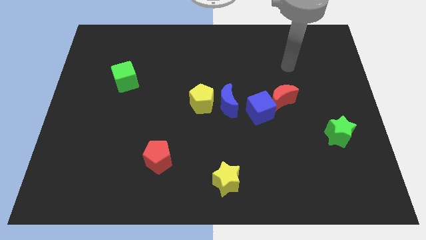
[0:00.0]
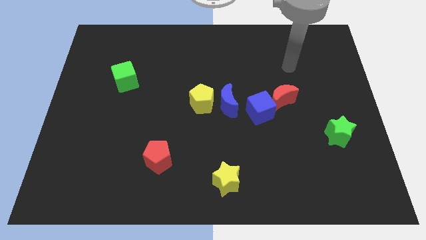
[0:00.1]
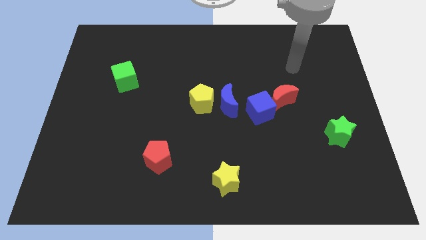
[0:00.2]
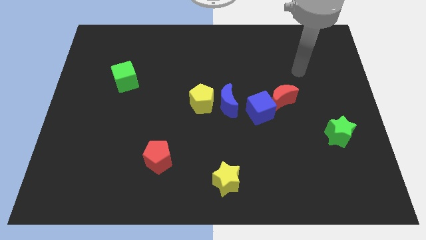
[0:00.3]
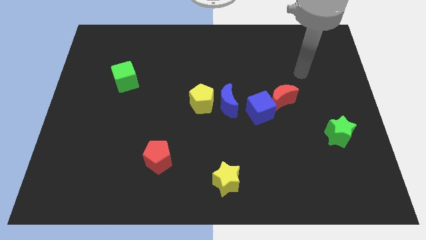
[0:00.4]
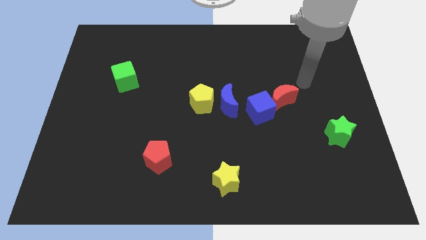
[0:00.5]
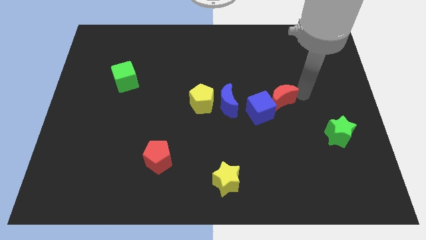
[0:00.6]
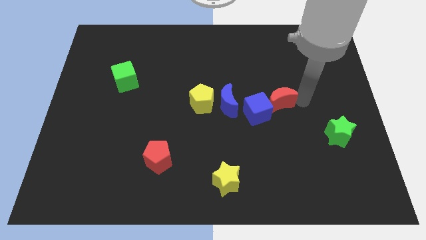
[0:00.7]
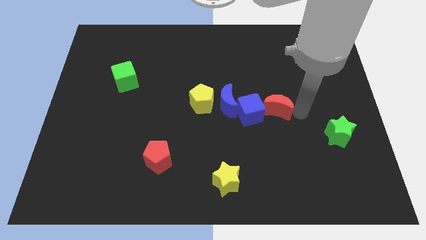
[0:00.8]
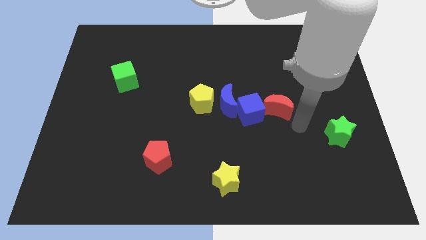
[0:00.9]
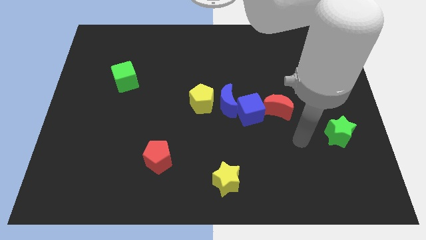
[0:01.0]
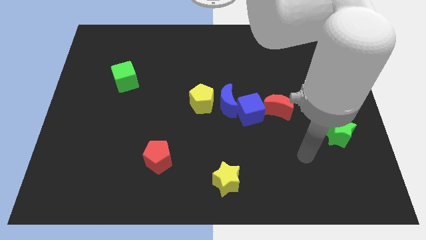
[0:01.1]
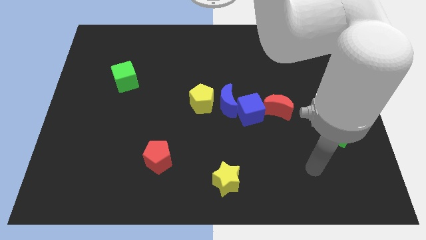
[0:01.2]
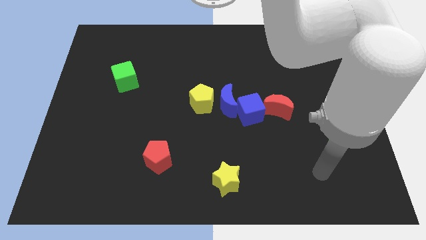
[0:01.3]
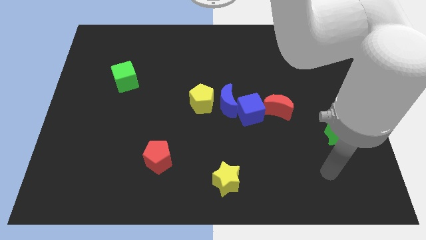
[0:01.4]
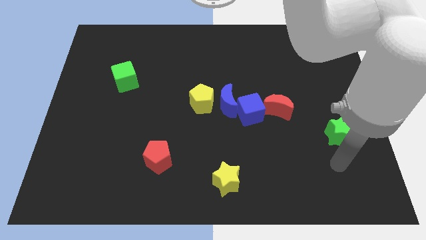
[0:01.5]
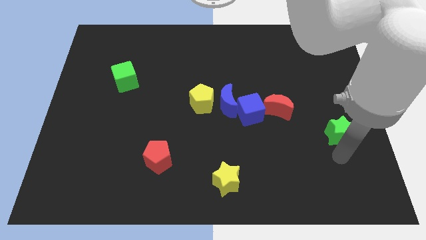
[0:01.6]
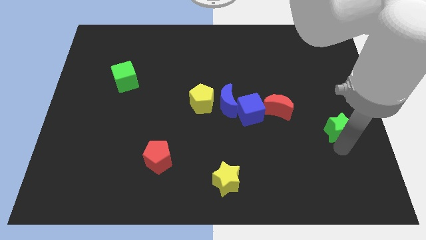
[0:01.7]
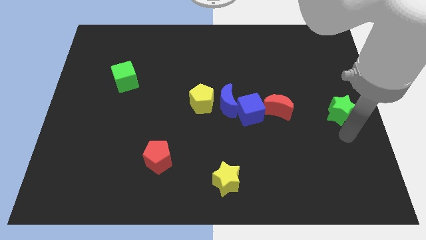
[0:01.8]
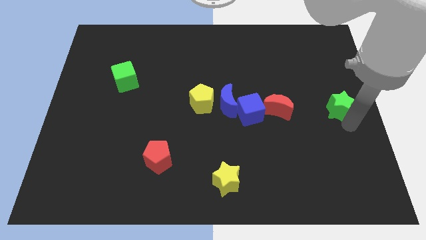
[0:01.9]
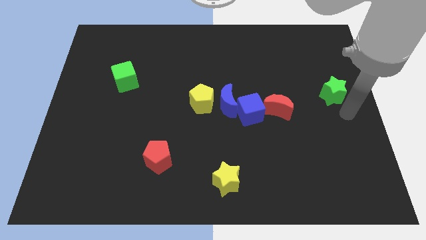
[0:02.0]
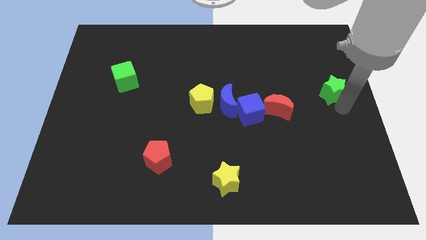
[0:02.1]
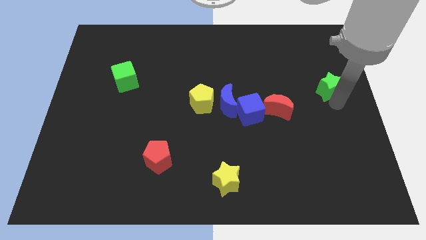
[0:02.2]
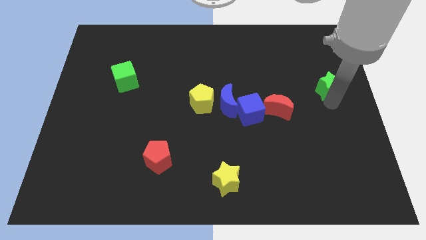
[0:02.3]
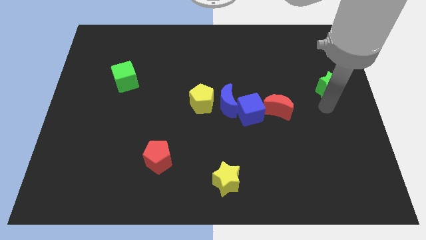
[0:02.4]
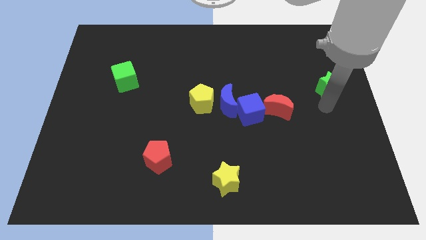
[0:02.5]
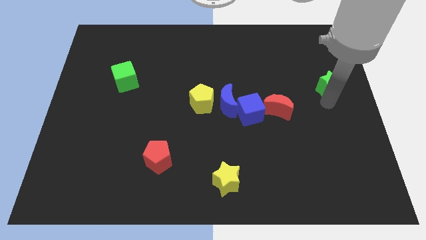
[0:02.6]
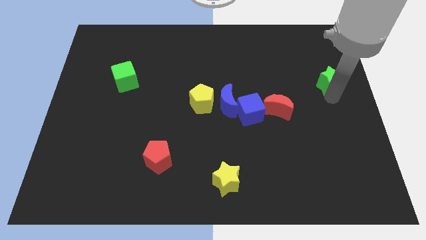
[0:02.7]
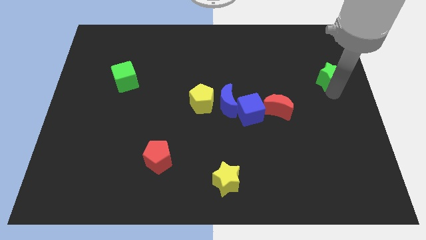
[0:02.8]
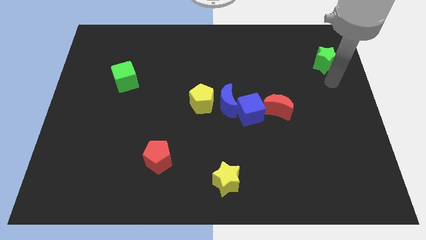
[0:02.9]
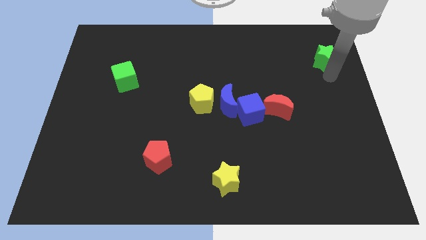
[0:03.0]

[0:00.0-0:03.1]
put the green star diagonally at the top right of the red crescent

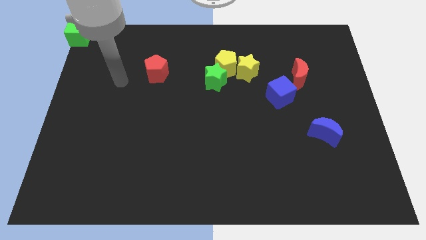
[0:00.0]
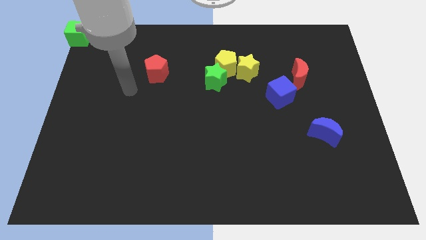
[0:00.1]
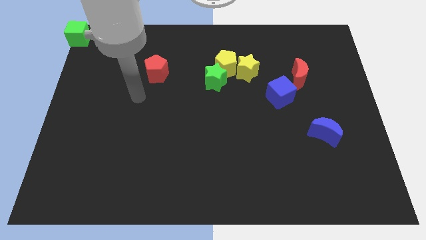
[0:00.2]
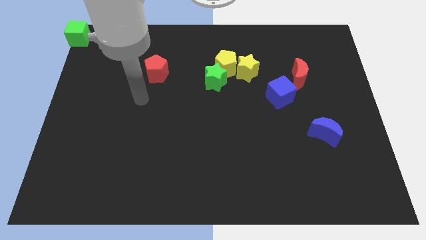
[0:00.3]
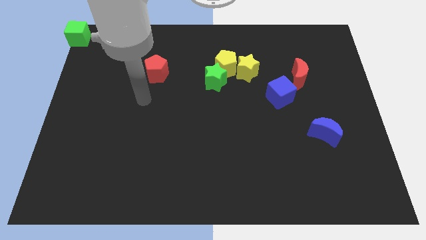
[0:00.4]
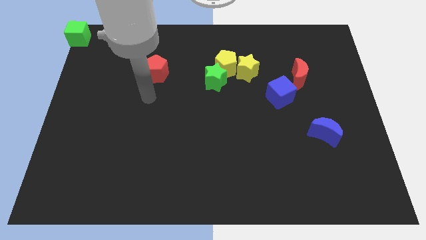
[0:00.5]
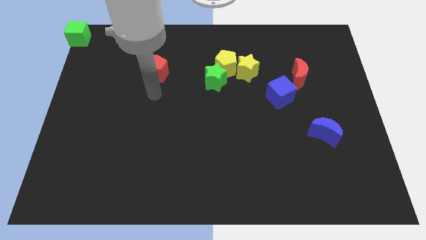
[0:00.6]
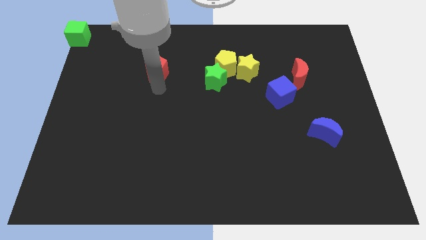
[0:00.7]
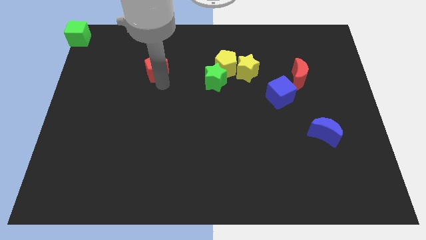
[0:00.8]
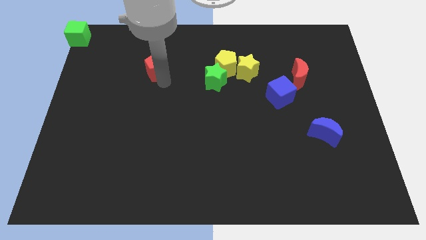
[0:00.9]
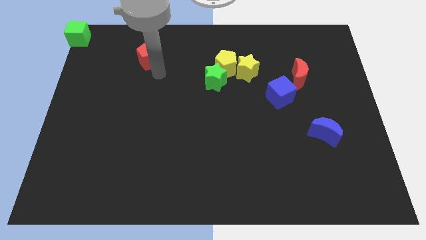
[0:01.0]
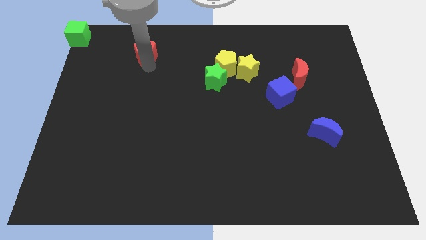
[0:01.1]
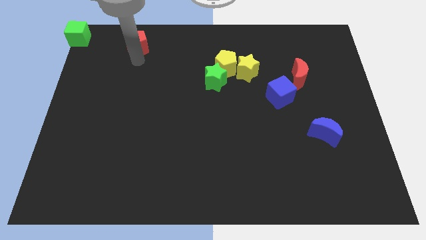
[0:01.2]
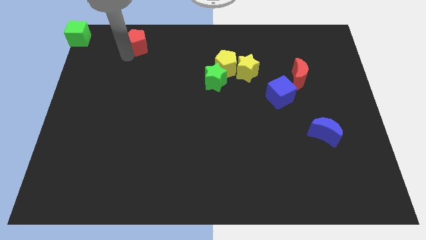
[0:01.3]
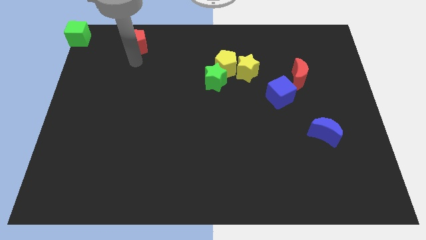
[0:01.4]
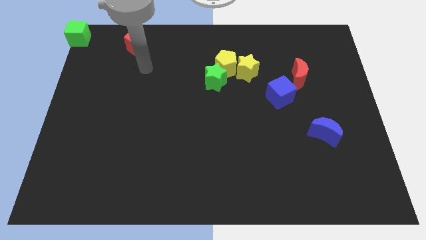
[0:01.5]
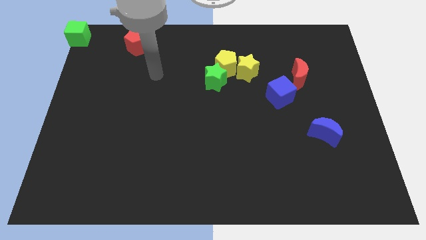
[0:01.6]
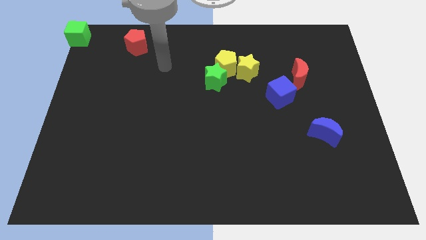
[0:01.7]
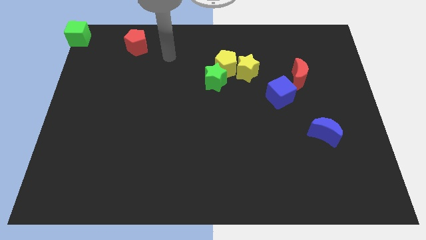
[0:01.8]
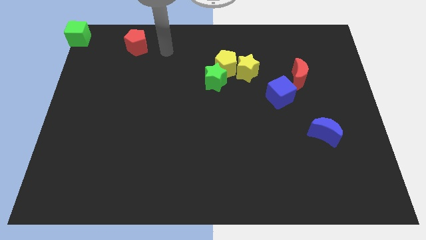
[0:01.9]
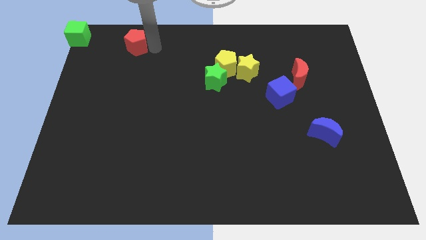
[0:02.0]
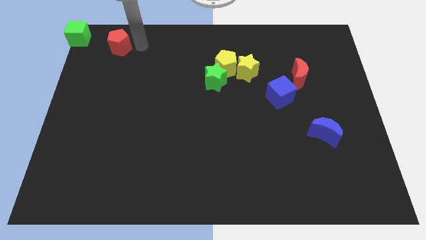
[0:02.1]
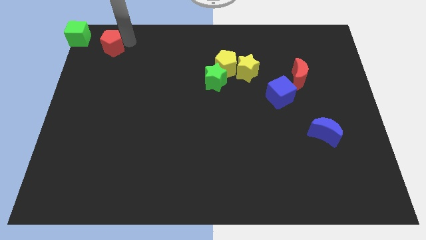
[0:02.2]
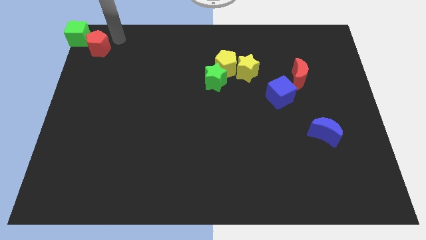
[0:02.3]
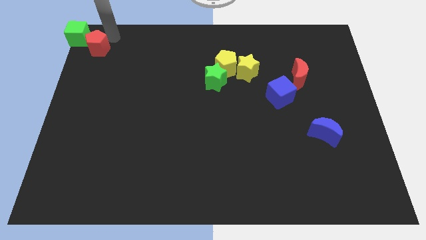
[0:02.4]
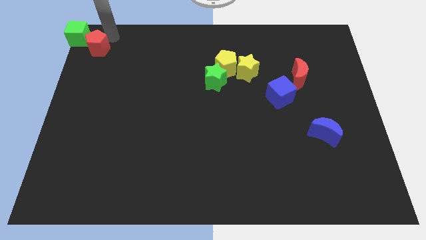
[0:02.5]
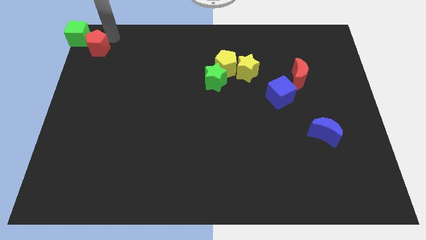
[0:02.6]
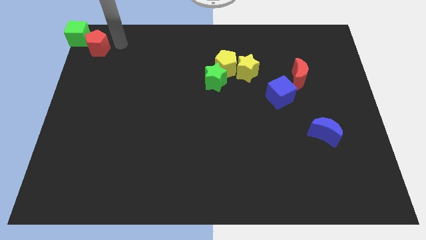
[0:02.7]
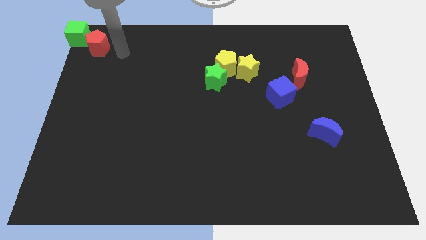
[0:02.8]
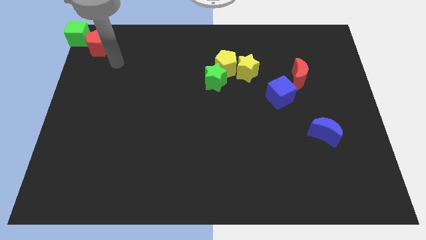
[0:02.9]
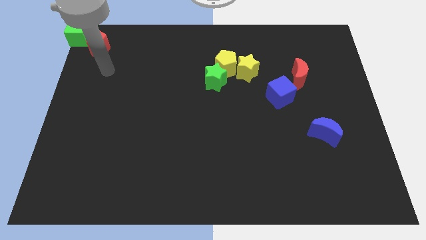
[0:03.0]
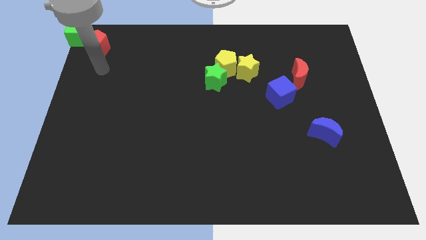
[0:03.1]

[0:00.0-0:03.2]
move the red pentagon towards the top left of the board

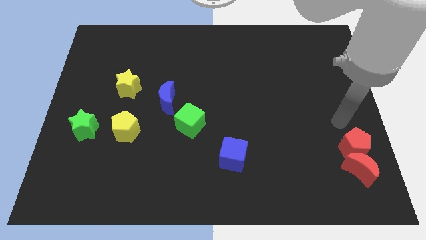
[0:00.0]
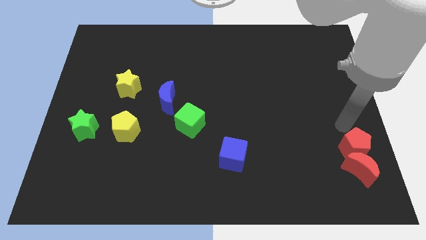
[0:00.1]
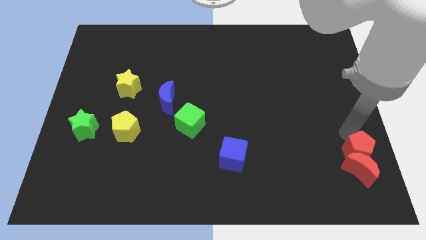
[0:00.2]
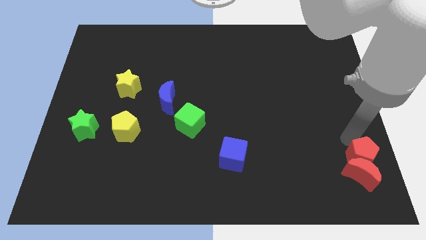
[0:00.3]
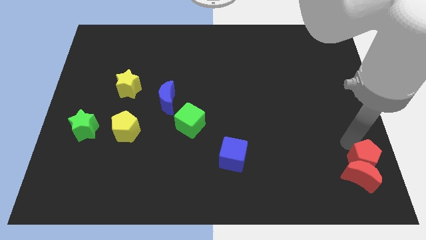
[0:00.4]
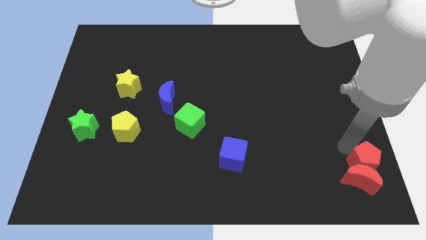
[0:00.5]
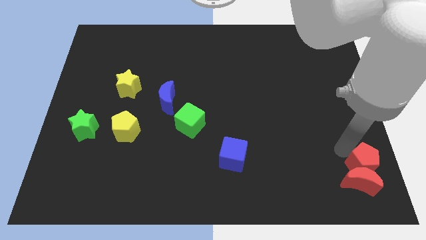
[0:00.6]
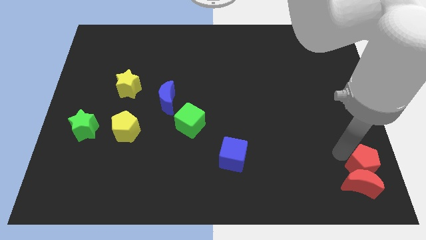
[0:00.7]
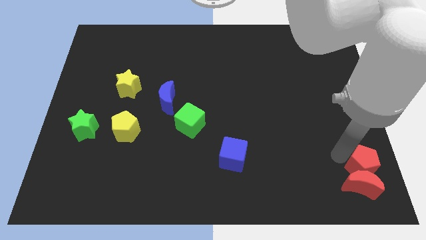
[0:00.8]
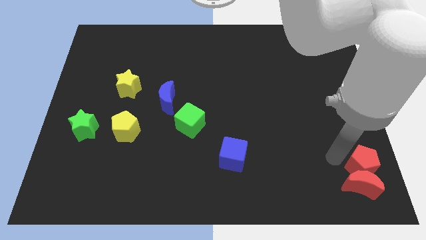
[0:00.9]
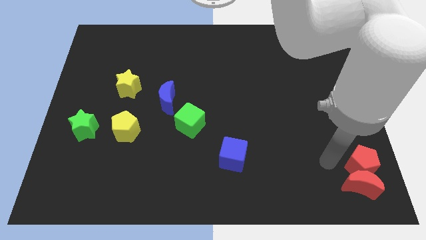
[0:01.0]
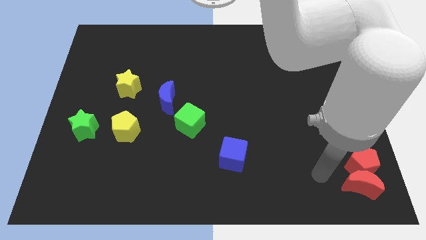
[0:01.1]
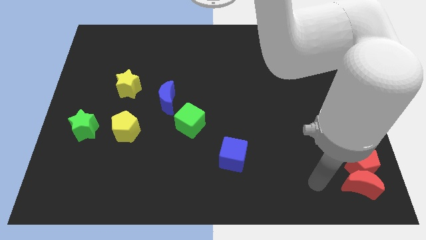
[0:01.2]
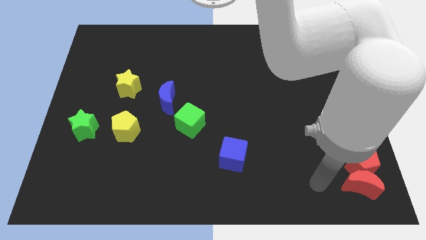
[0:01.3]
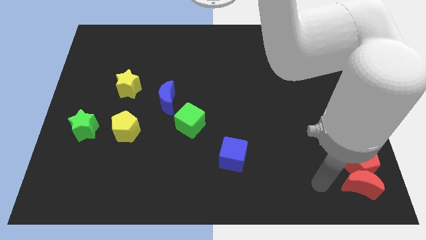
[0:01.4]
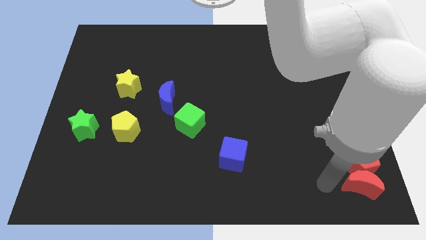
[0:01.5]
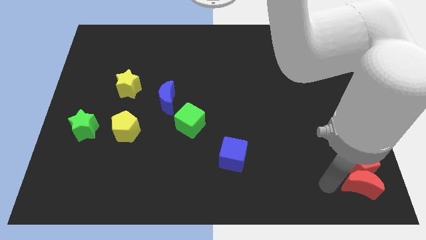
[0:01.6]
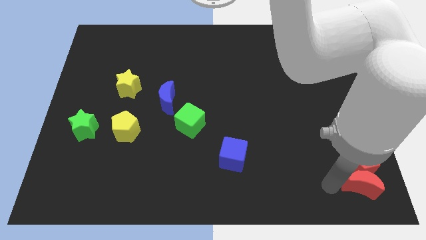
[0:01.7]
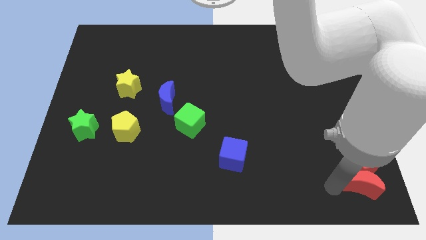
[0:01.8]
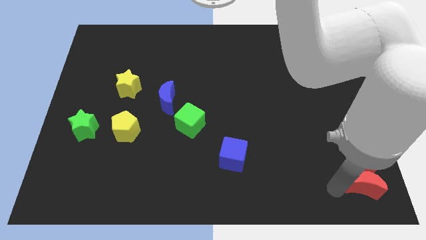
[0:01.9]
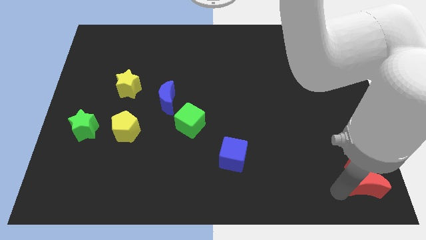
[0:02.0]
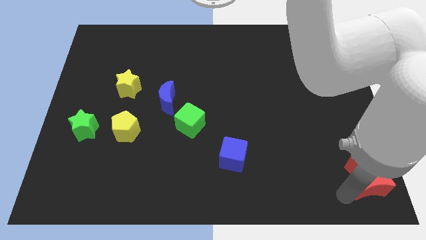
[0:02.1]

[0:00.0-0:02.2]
slide the red blocks to the bottom right of the board

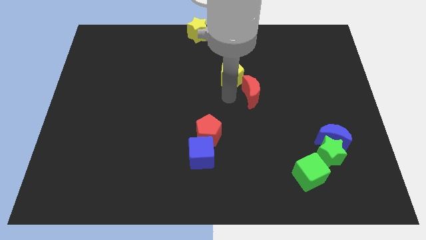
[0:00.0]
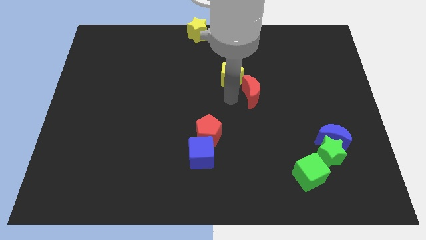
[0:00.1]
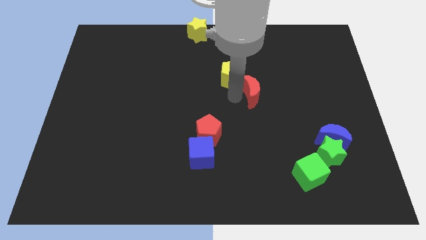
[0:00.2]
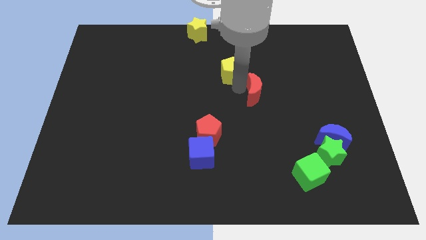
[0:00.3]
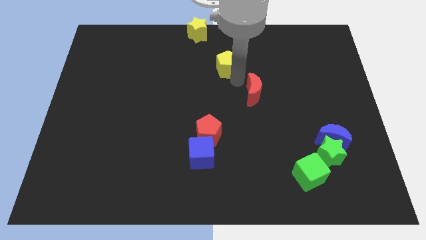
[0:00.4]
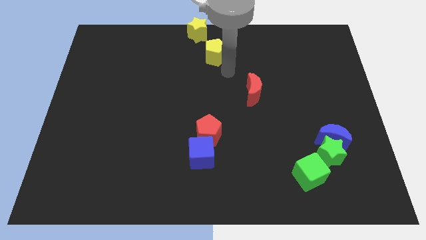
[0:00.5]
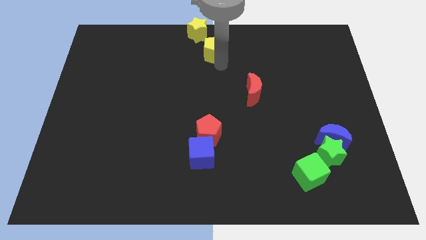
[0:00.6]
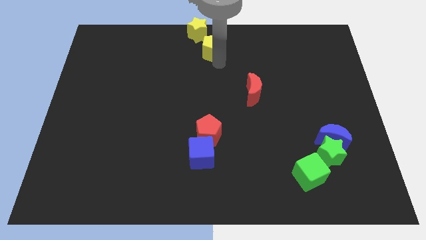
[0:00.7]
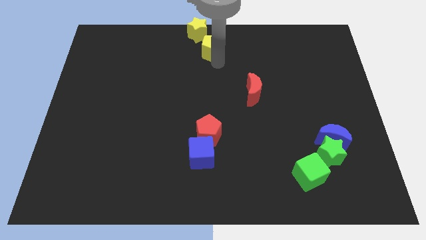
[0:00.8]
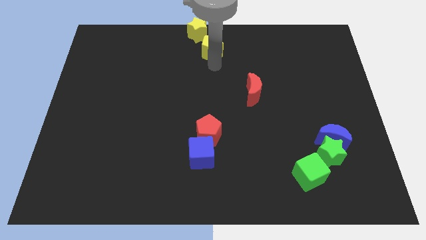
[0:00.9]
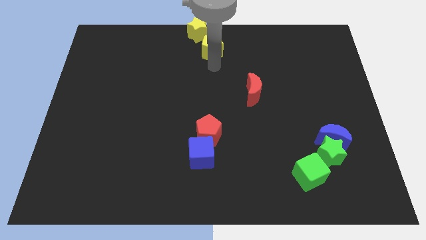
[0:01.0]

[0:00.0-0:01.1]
separate yellow pentagon from red moon
